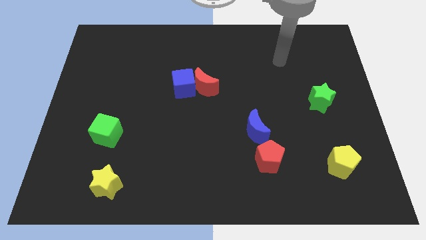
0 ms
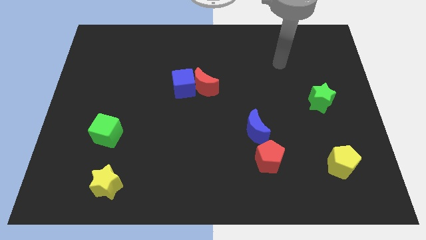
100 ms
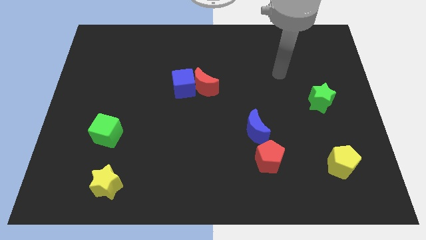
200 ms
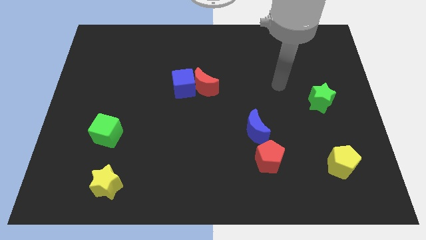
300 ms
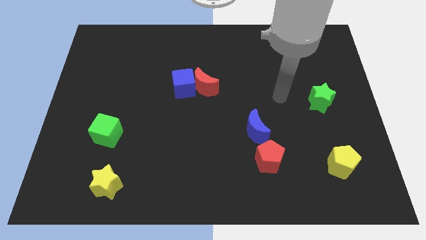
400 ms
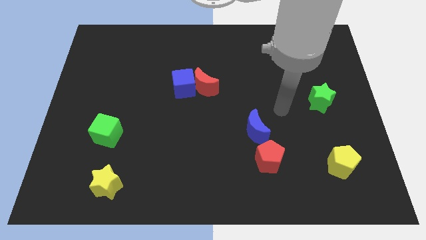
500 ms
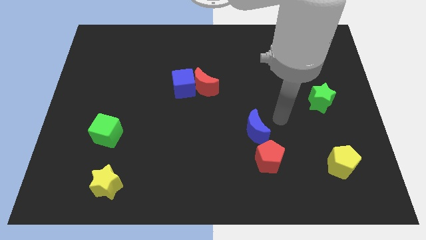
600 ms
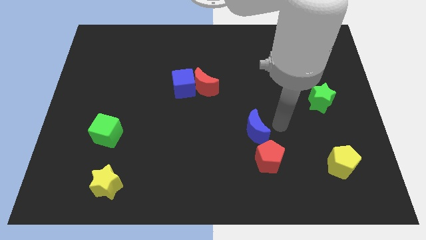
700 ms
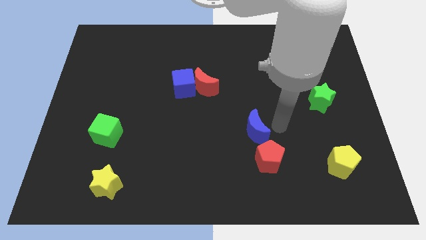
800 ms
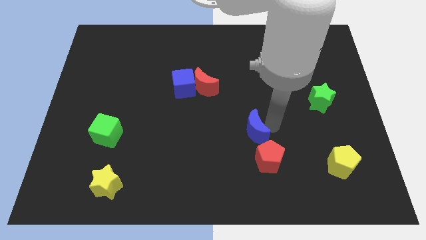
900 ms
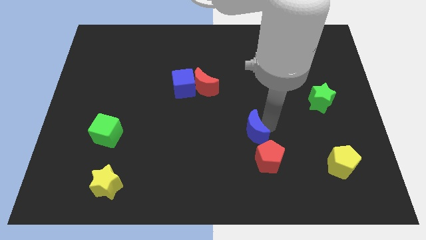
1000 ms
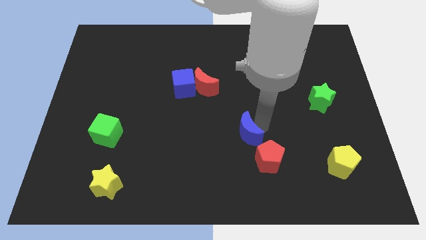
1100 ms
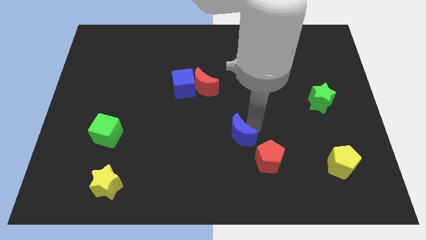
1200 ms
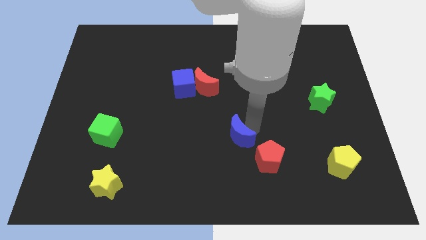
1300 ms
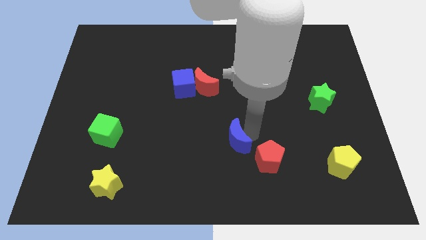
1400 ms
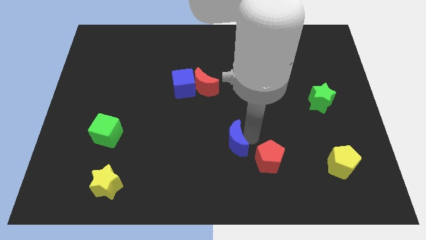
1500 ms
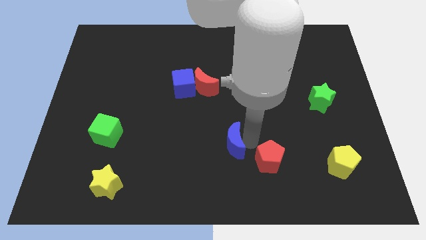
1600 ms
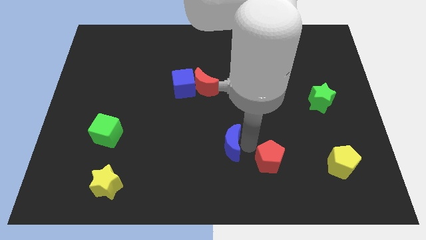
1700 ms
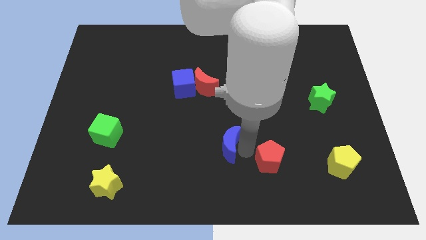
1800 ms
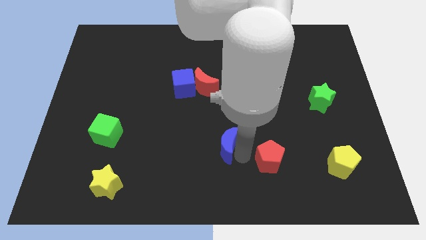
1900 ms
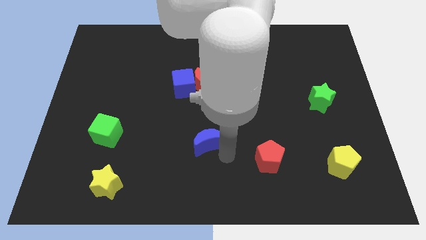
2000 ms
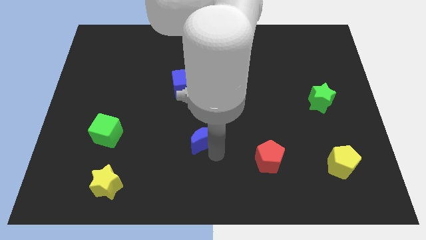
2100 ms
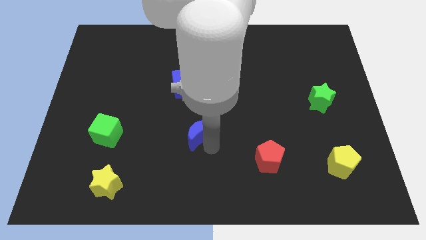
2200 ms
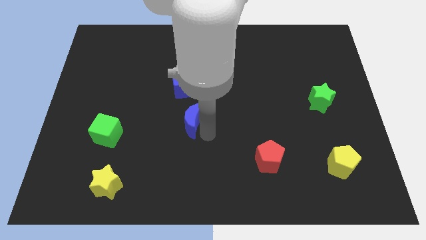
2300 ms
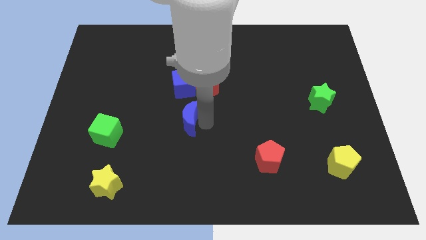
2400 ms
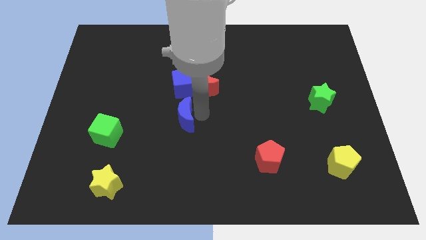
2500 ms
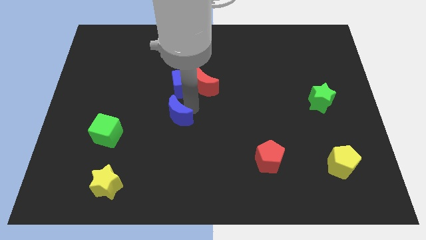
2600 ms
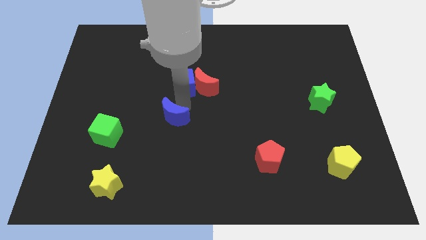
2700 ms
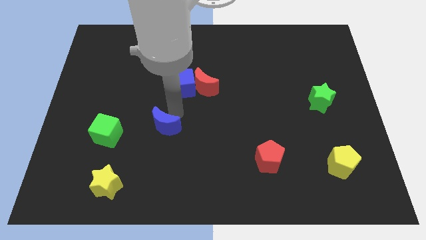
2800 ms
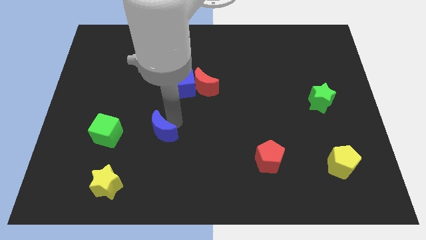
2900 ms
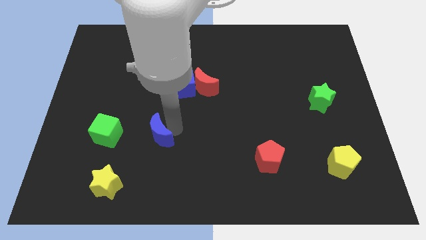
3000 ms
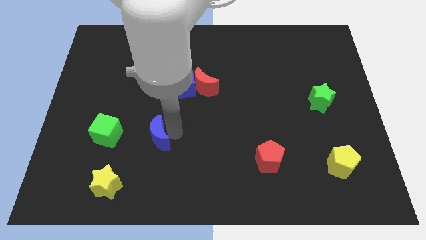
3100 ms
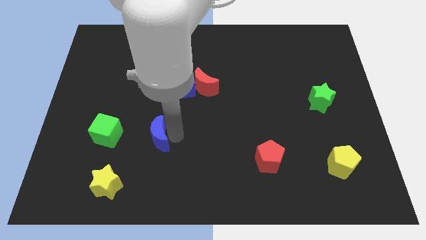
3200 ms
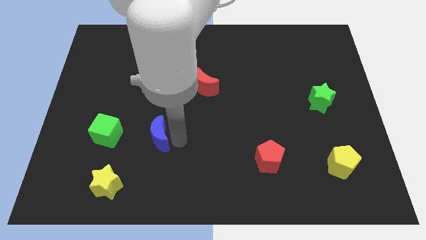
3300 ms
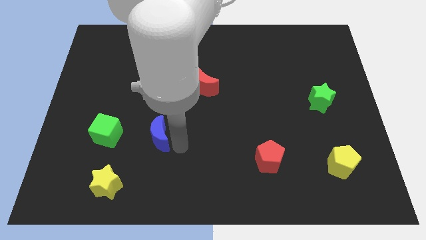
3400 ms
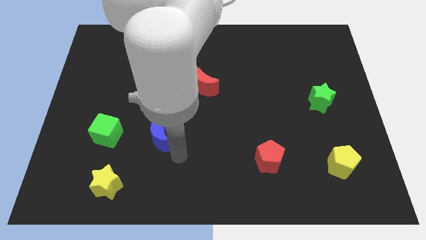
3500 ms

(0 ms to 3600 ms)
move the blue moon towards the green cube

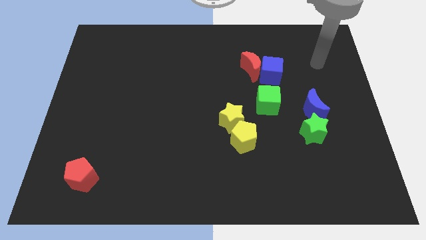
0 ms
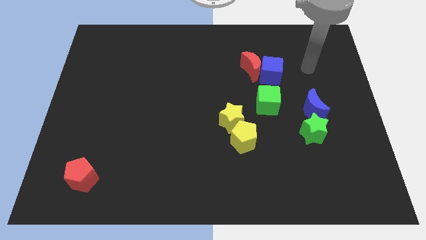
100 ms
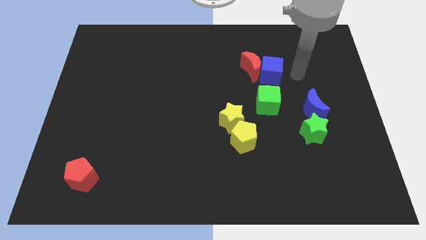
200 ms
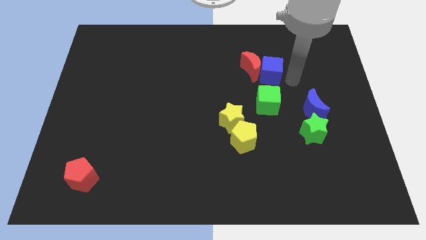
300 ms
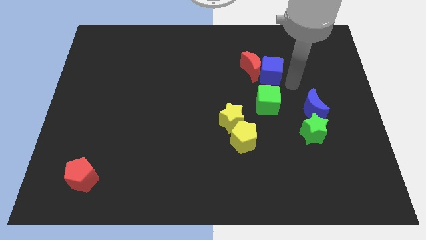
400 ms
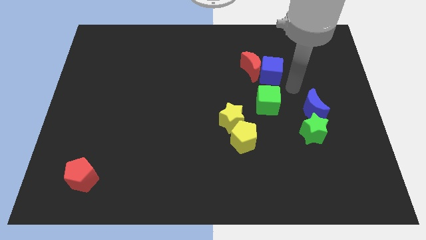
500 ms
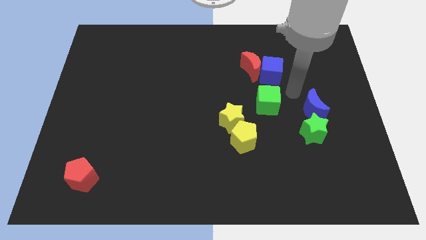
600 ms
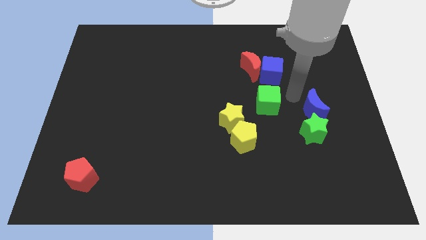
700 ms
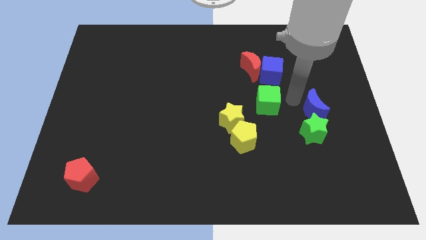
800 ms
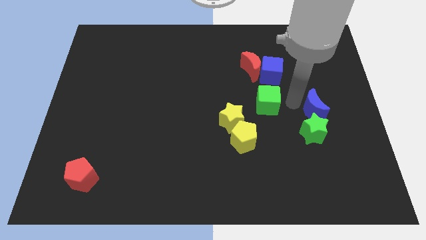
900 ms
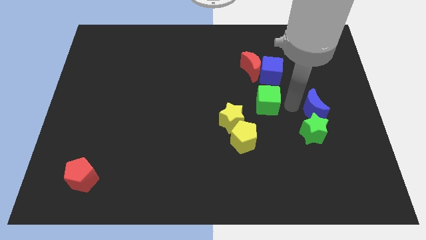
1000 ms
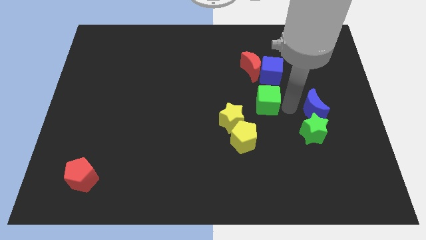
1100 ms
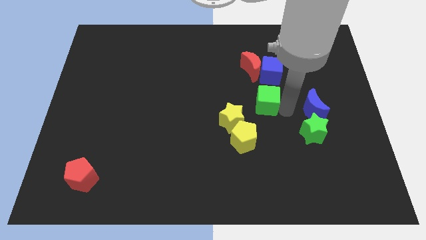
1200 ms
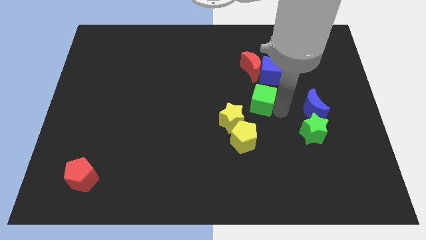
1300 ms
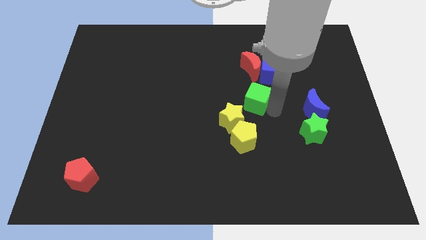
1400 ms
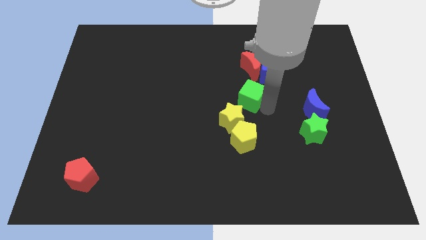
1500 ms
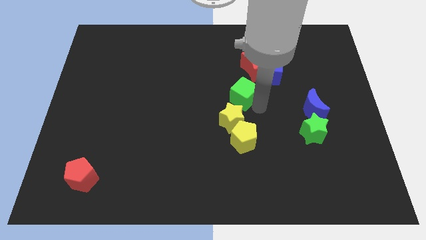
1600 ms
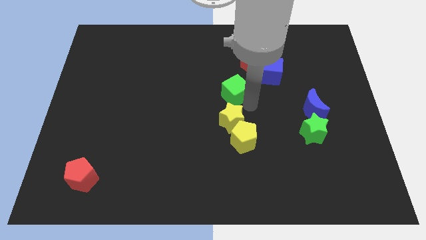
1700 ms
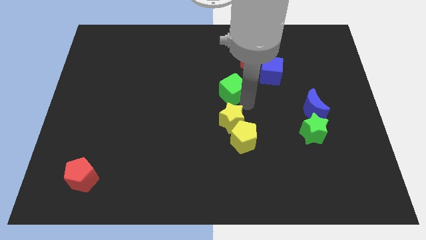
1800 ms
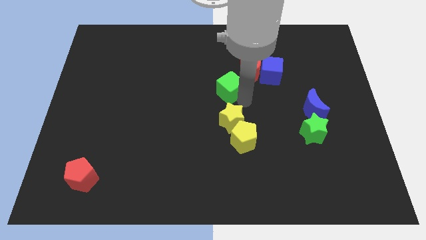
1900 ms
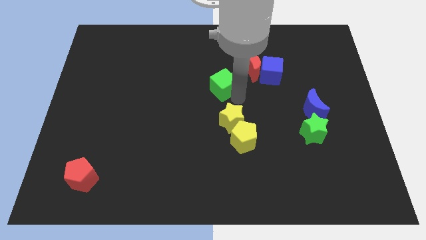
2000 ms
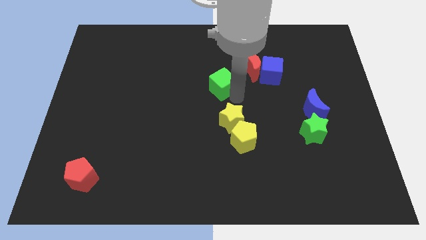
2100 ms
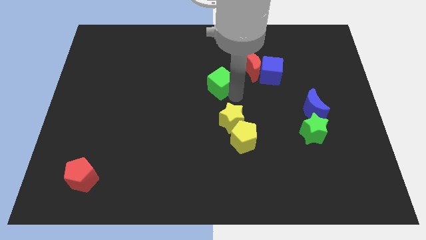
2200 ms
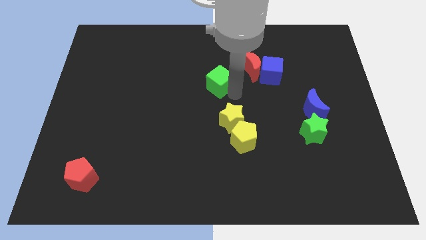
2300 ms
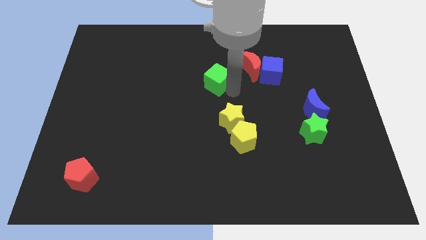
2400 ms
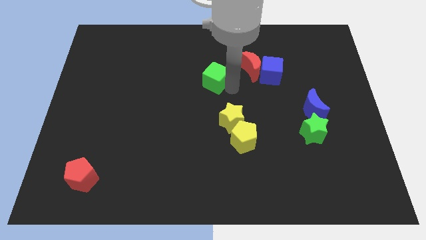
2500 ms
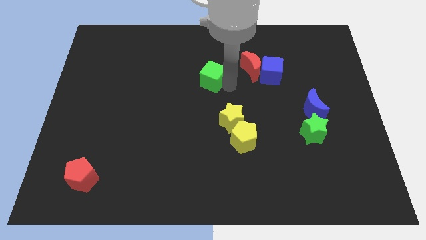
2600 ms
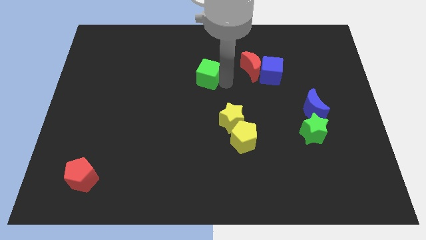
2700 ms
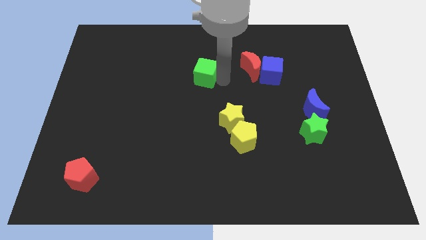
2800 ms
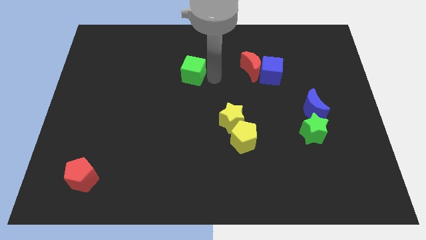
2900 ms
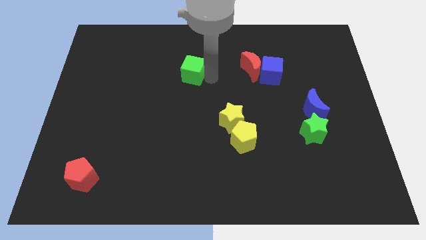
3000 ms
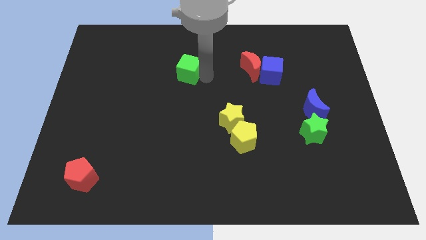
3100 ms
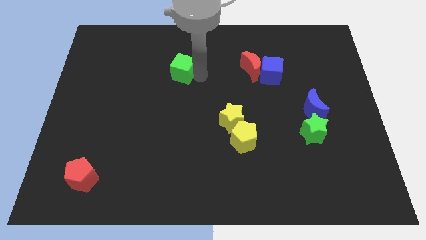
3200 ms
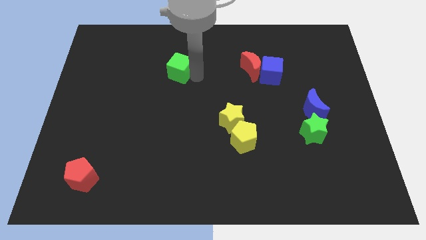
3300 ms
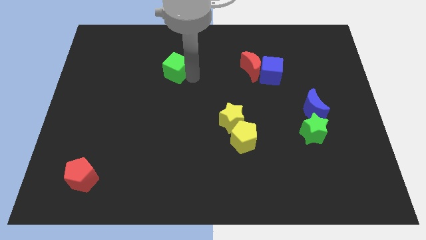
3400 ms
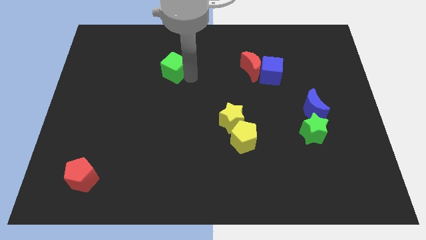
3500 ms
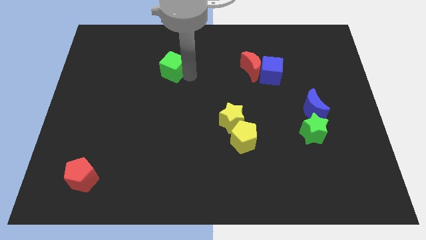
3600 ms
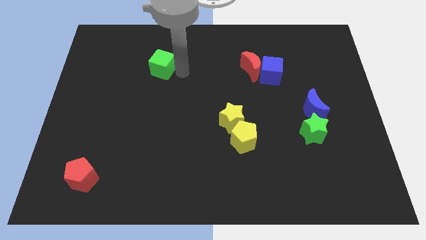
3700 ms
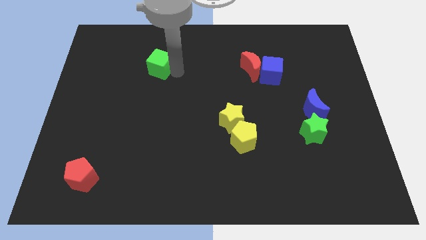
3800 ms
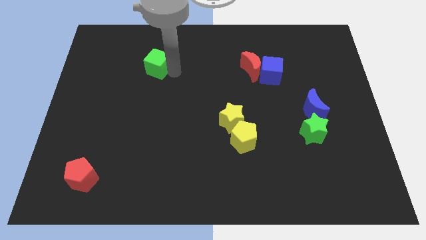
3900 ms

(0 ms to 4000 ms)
move the green cube to the top left of the board

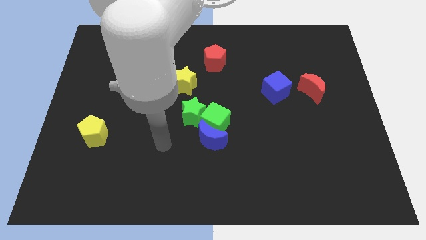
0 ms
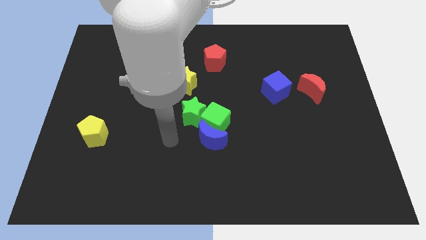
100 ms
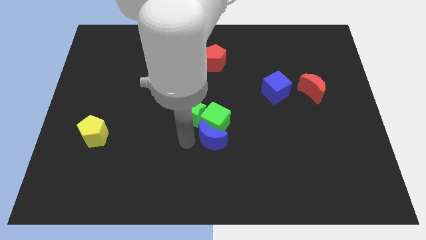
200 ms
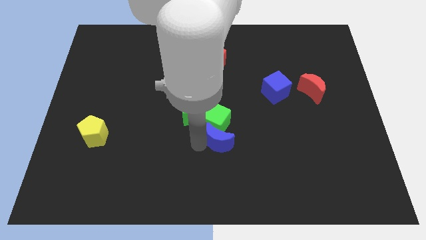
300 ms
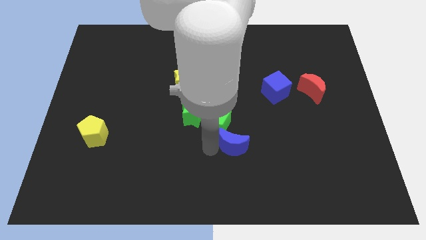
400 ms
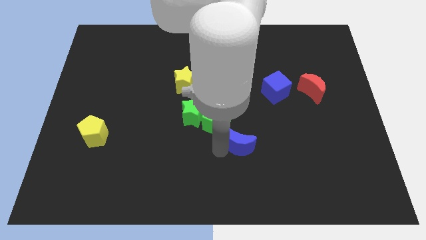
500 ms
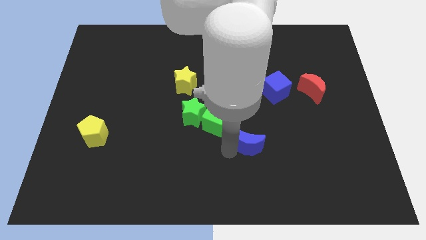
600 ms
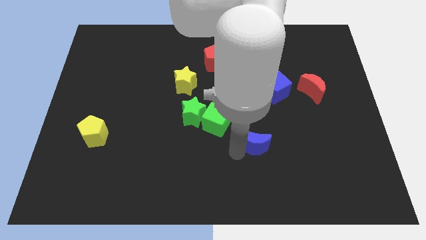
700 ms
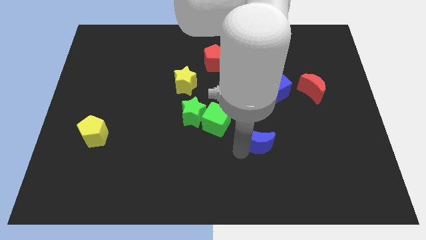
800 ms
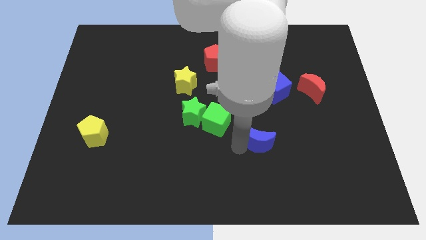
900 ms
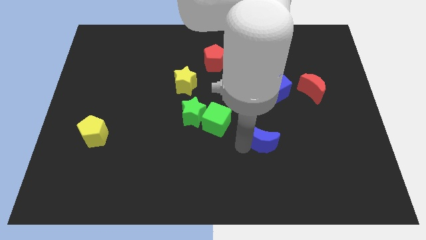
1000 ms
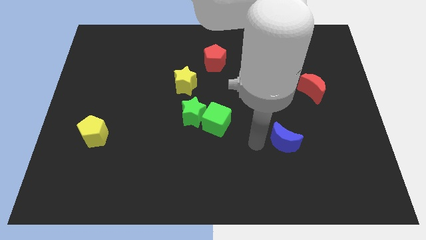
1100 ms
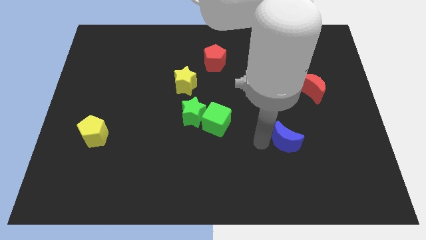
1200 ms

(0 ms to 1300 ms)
push the blue moon away from the green cube
